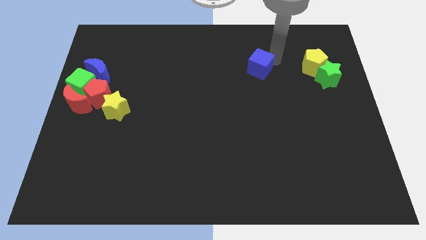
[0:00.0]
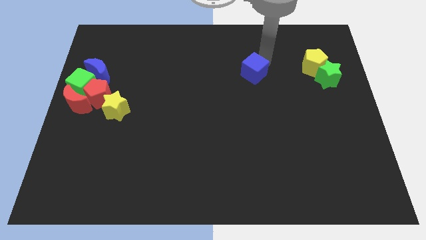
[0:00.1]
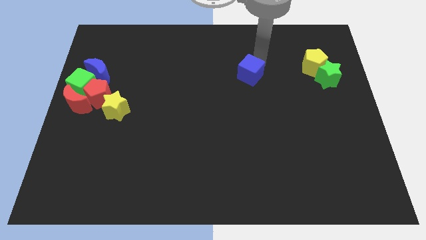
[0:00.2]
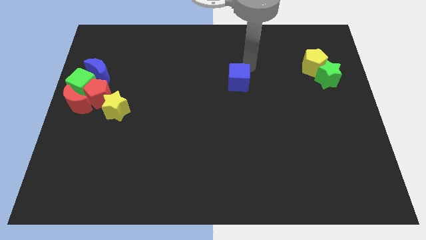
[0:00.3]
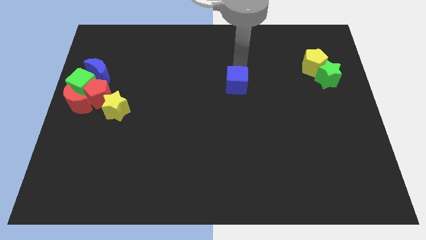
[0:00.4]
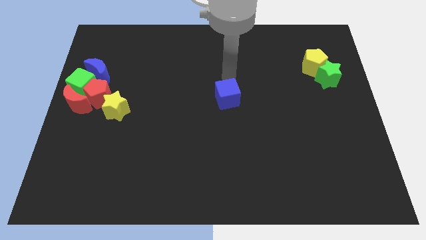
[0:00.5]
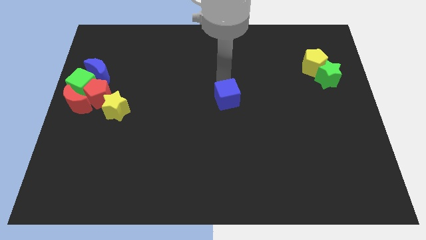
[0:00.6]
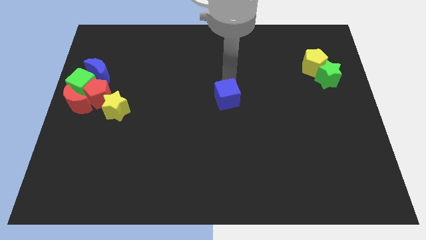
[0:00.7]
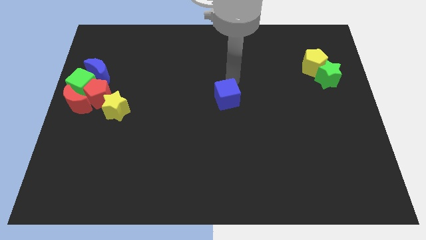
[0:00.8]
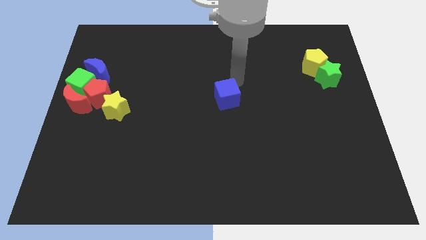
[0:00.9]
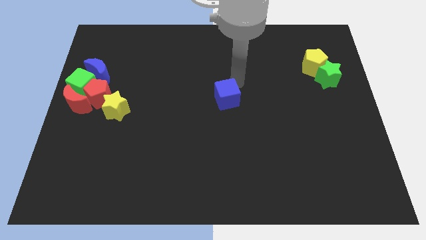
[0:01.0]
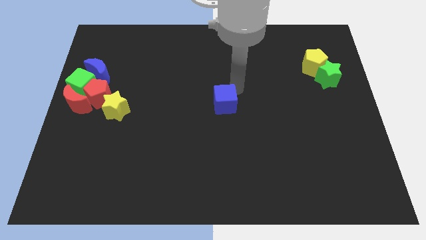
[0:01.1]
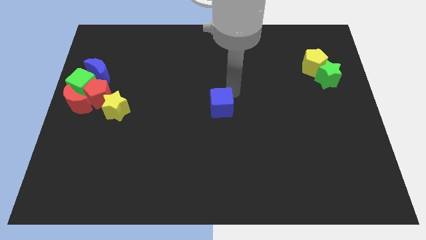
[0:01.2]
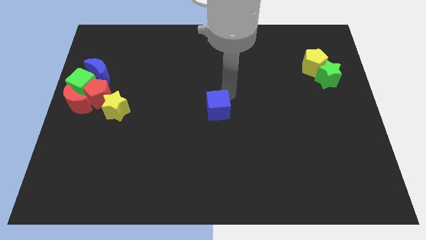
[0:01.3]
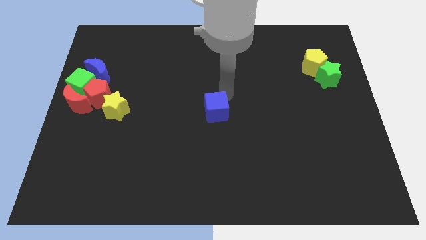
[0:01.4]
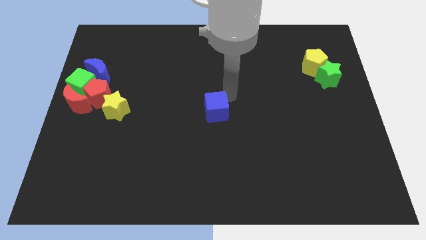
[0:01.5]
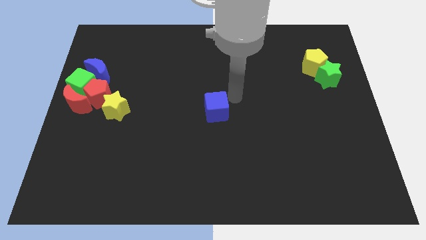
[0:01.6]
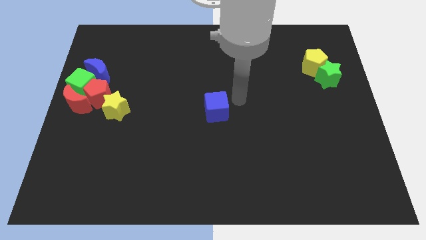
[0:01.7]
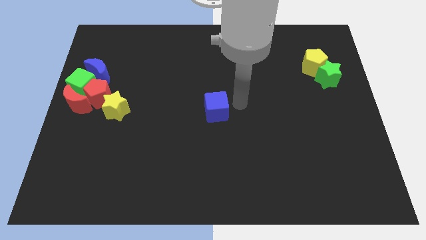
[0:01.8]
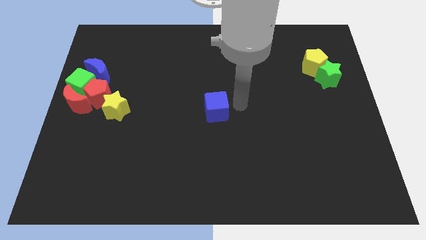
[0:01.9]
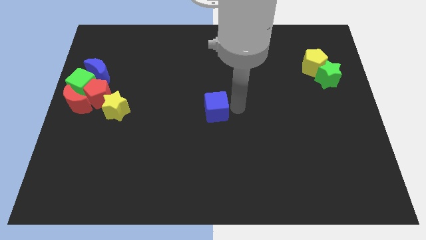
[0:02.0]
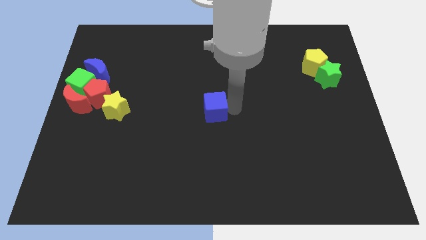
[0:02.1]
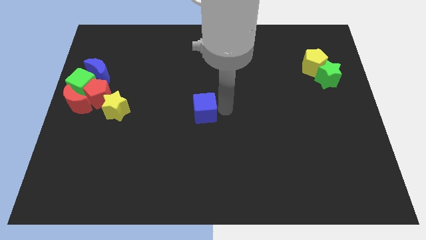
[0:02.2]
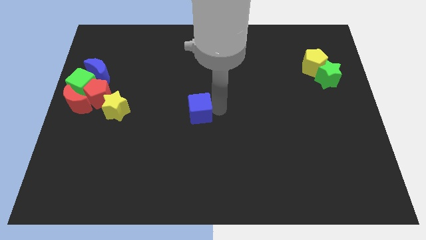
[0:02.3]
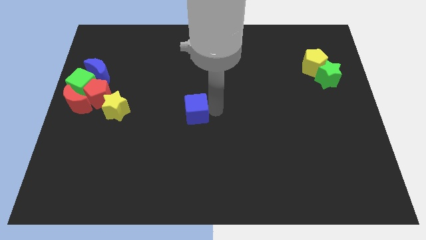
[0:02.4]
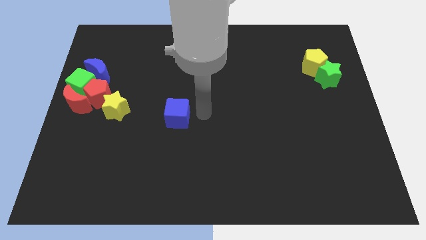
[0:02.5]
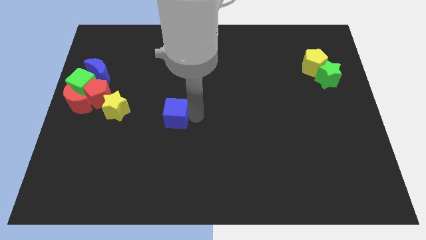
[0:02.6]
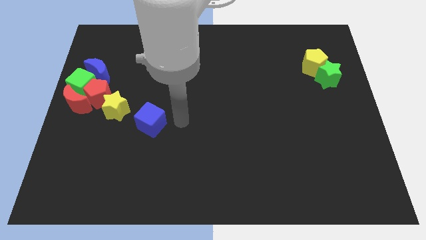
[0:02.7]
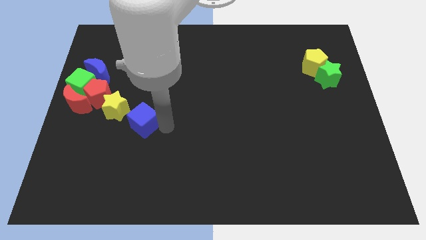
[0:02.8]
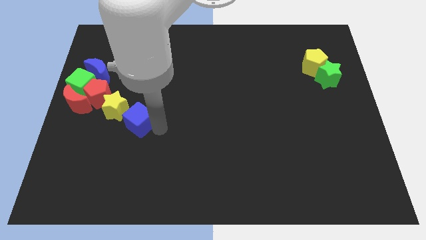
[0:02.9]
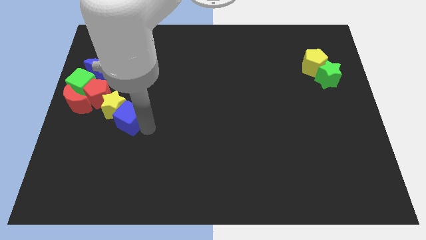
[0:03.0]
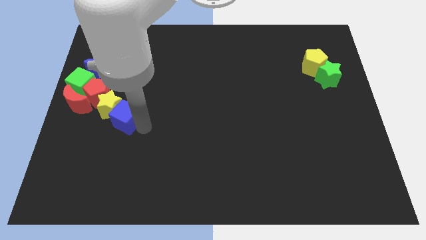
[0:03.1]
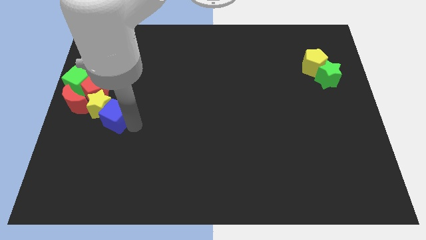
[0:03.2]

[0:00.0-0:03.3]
push the blue cube towards the yellow star

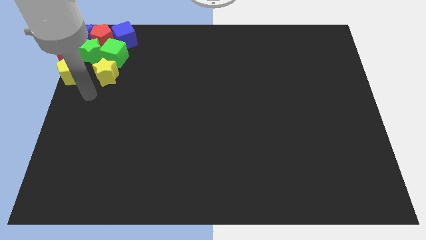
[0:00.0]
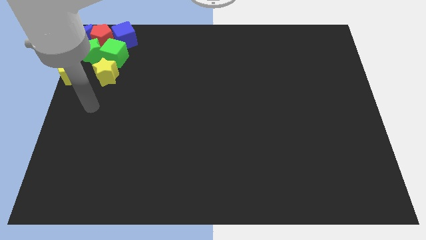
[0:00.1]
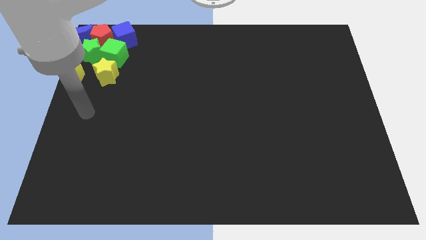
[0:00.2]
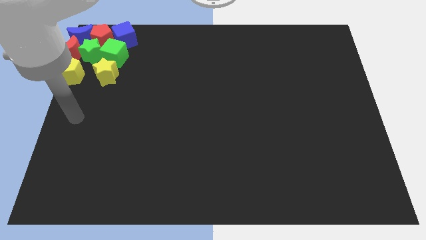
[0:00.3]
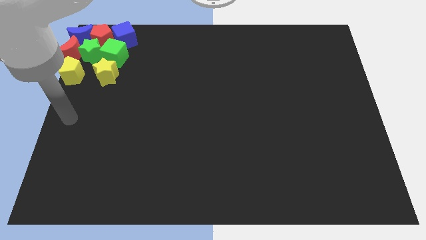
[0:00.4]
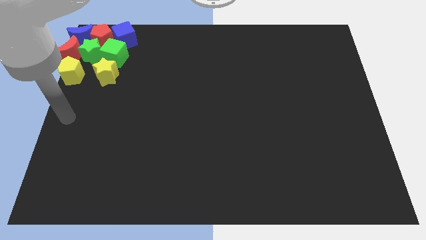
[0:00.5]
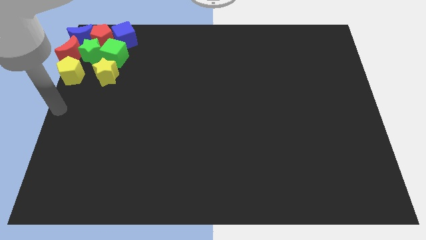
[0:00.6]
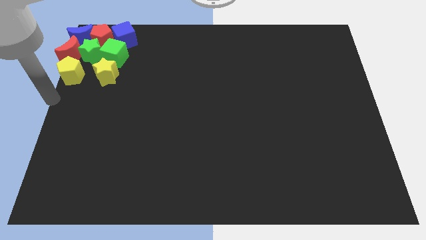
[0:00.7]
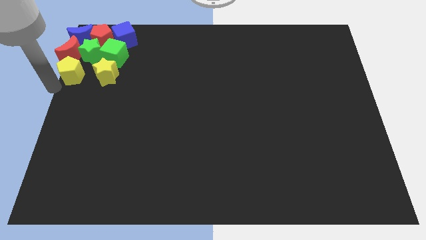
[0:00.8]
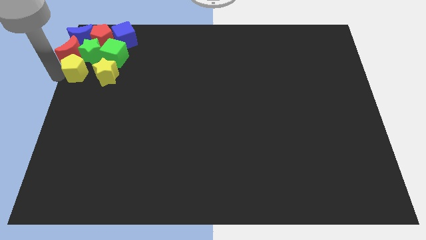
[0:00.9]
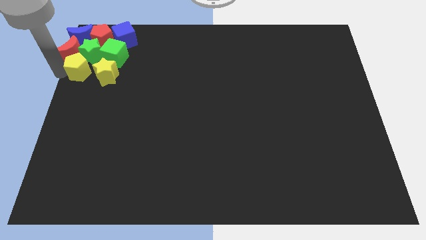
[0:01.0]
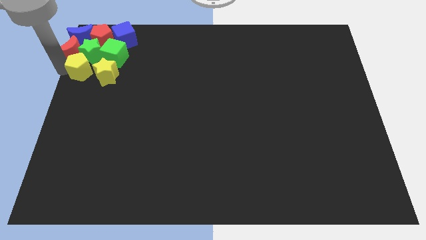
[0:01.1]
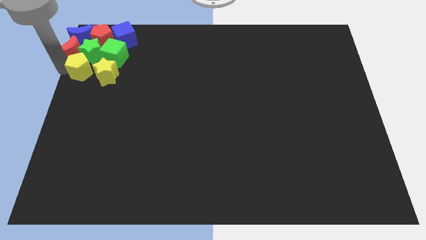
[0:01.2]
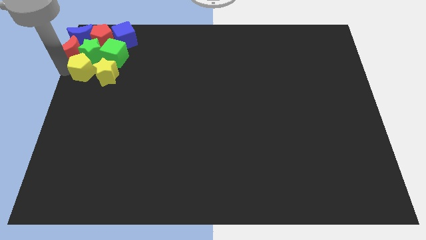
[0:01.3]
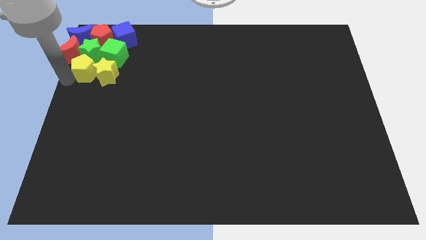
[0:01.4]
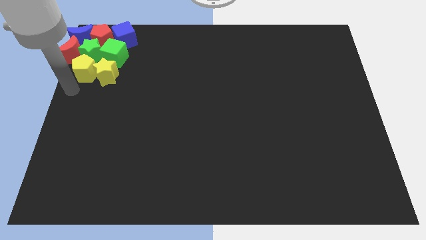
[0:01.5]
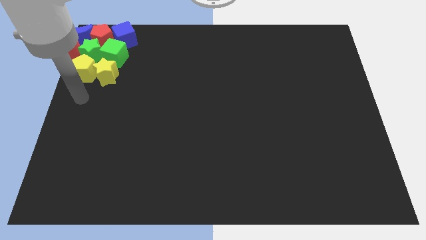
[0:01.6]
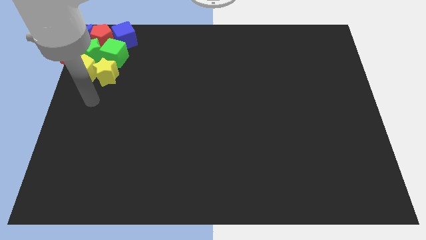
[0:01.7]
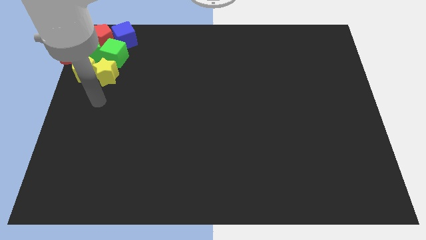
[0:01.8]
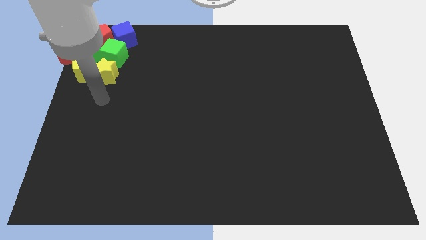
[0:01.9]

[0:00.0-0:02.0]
group up all the blocks

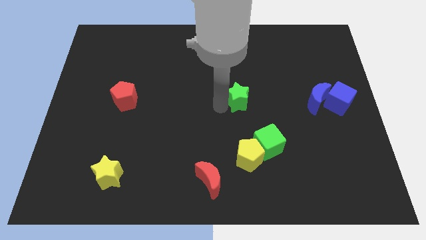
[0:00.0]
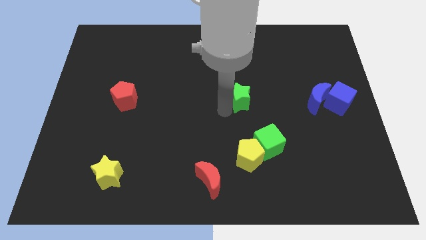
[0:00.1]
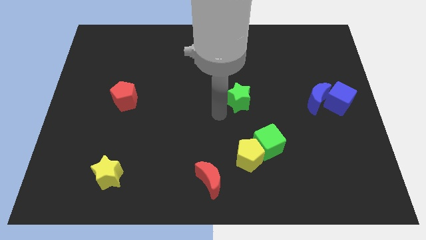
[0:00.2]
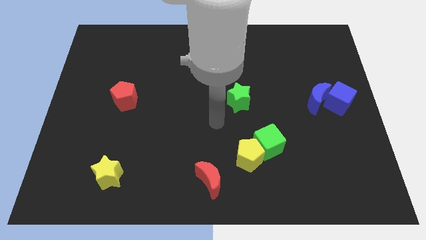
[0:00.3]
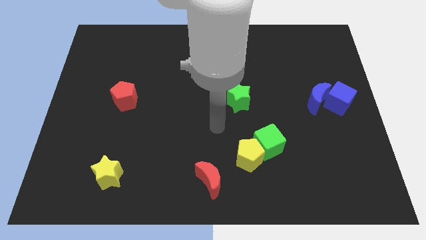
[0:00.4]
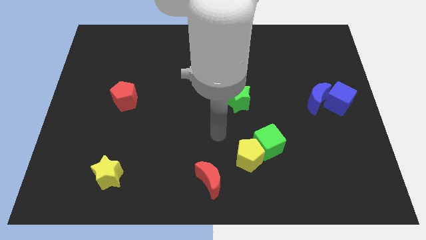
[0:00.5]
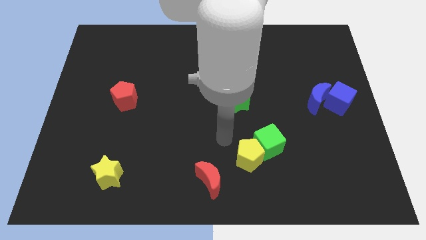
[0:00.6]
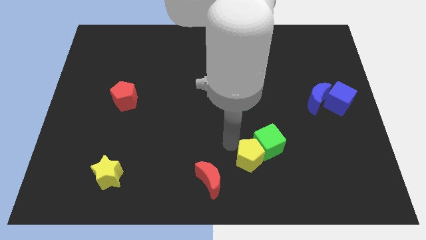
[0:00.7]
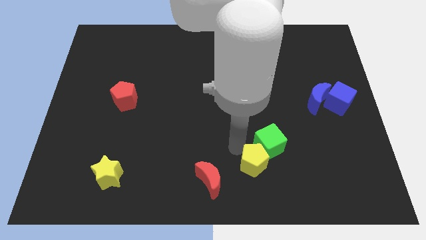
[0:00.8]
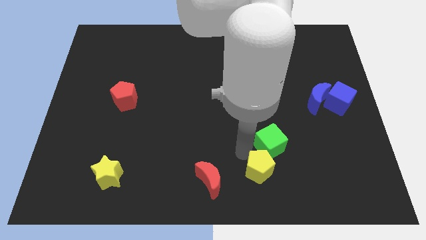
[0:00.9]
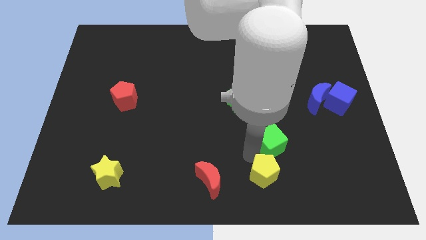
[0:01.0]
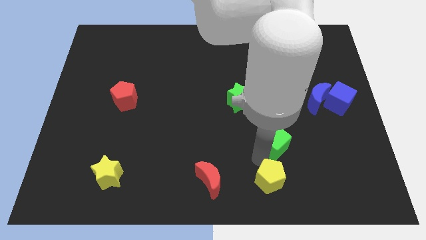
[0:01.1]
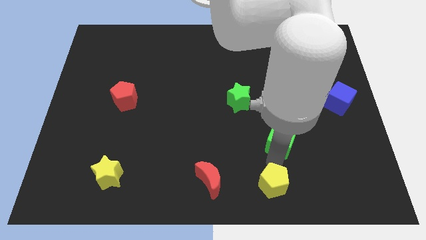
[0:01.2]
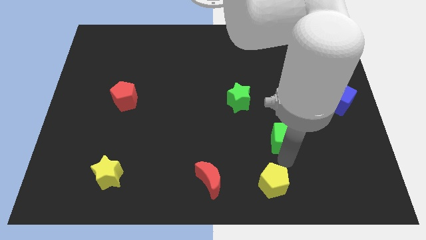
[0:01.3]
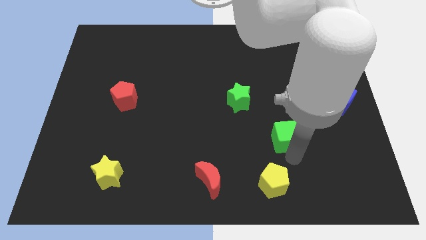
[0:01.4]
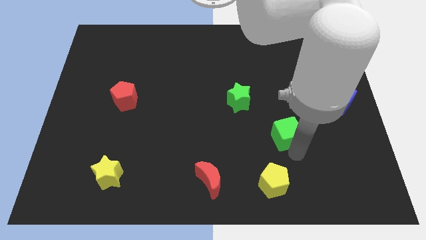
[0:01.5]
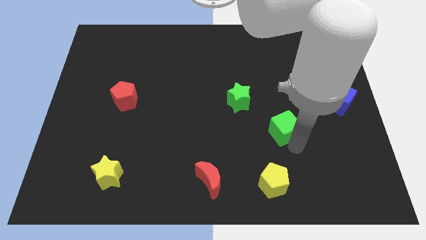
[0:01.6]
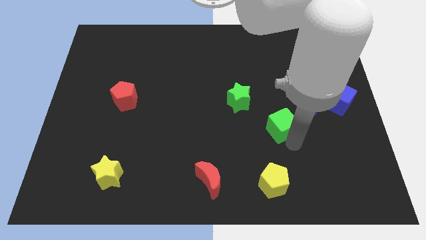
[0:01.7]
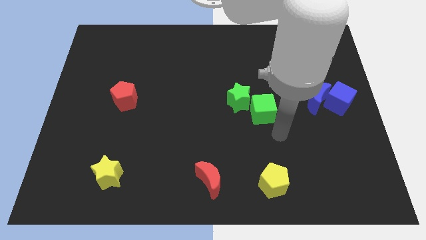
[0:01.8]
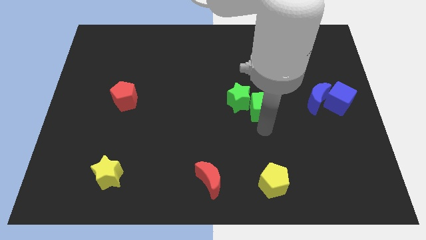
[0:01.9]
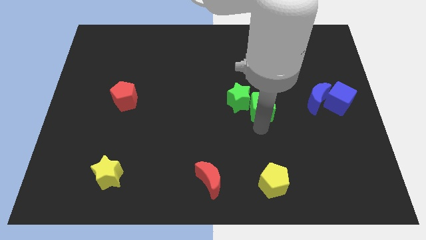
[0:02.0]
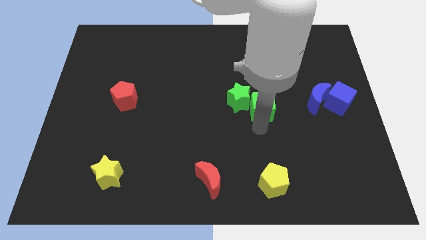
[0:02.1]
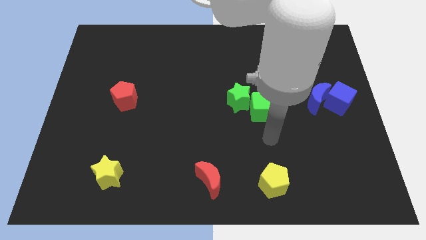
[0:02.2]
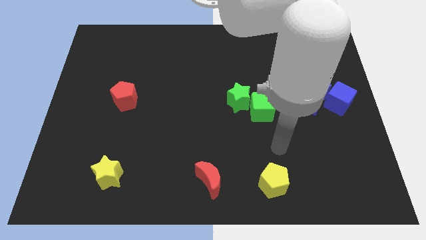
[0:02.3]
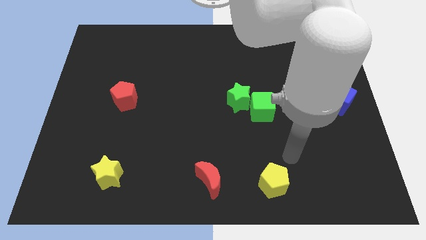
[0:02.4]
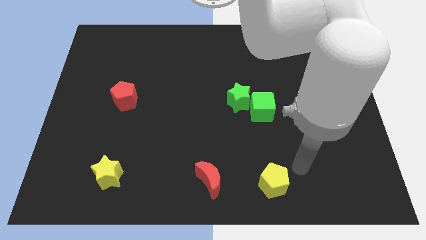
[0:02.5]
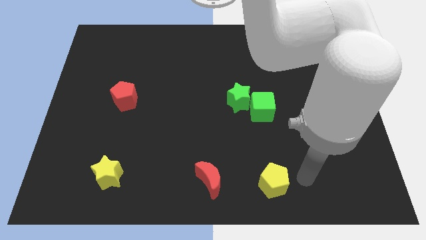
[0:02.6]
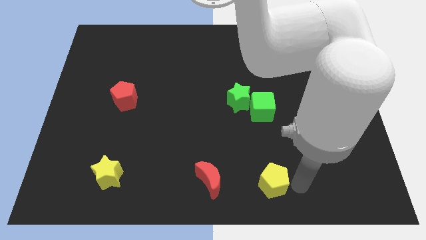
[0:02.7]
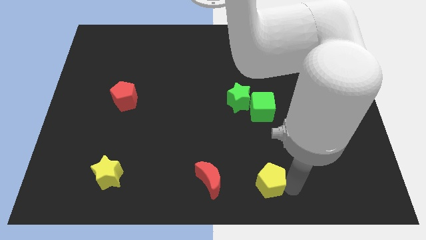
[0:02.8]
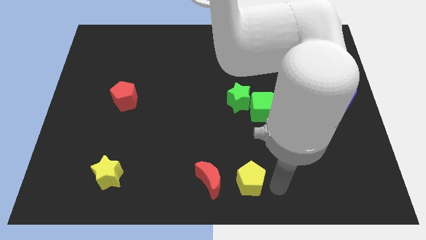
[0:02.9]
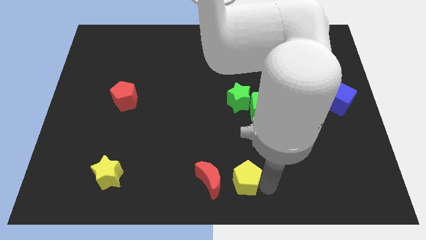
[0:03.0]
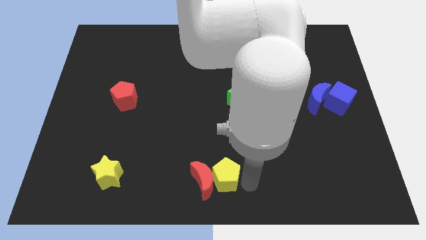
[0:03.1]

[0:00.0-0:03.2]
separate green cube and the yellow pentagon

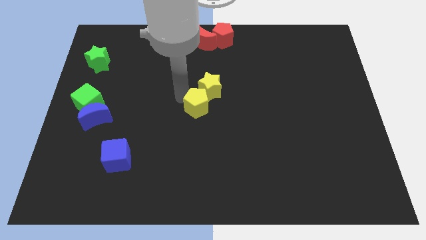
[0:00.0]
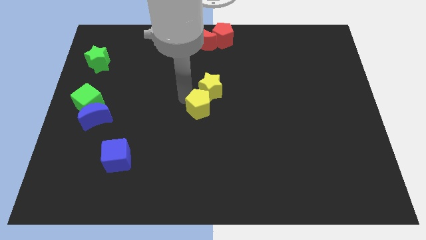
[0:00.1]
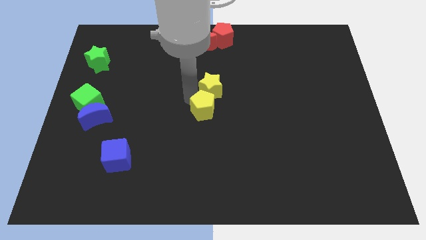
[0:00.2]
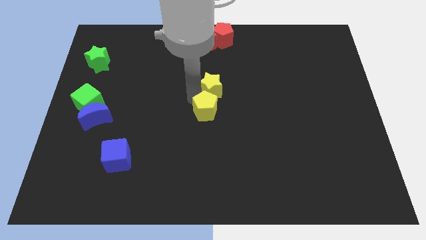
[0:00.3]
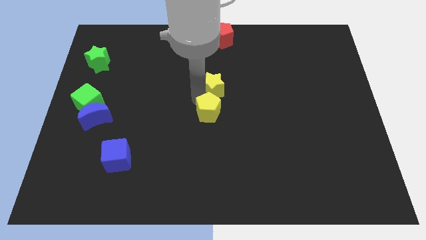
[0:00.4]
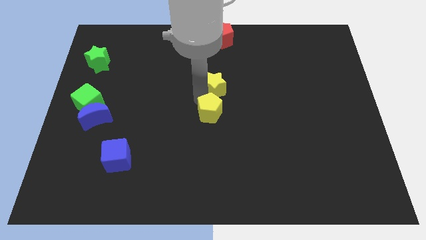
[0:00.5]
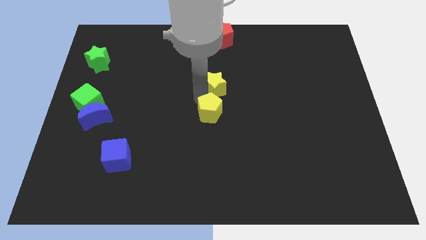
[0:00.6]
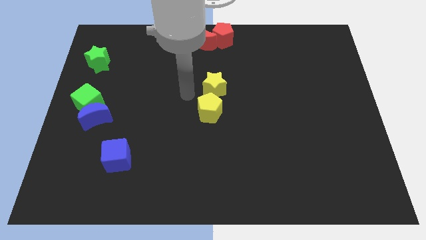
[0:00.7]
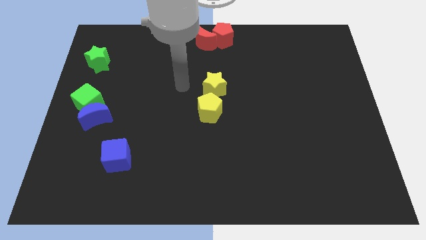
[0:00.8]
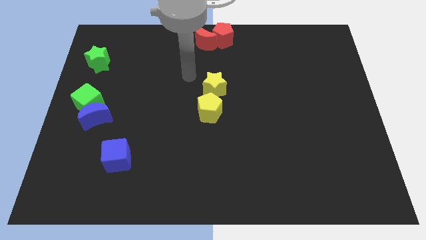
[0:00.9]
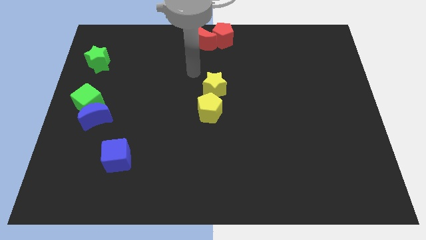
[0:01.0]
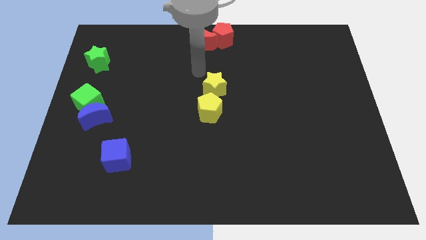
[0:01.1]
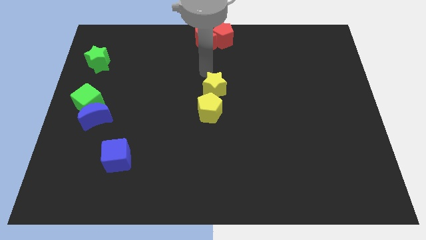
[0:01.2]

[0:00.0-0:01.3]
push the yellow pentagon to the bottom of the yellow star vertically
